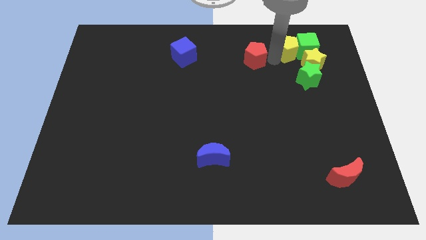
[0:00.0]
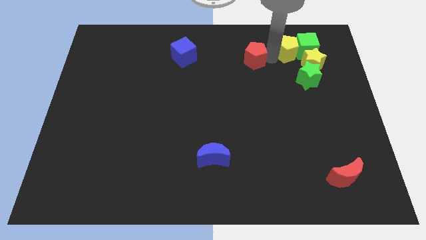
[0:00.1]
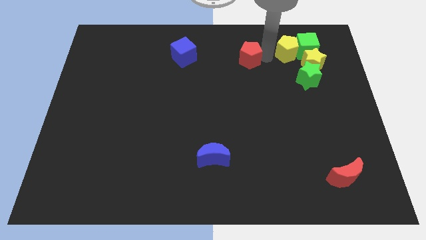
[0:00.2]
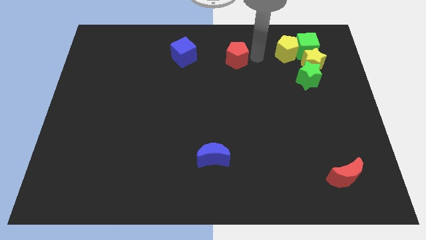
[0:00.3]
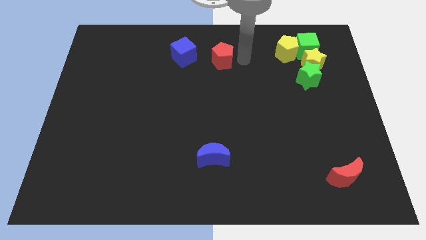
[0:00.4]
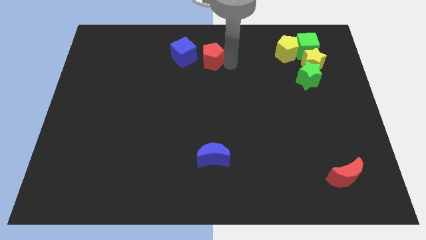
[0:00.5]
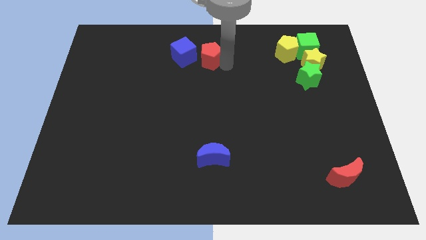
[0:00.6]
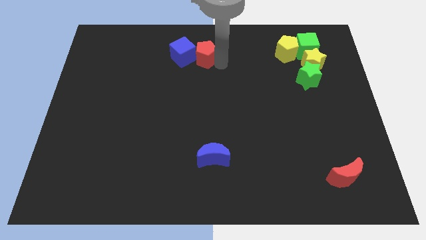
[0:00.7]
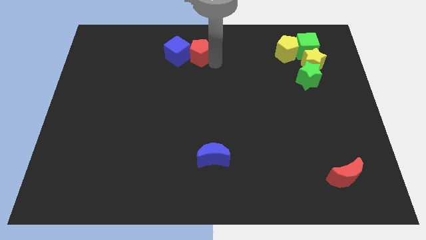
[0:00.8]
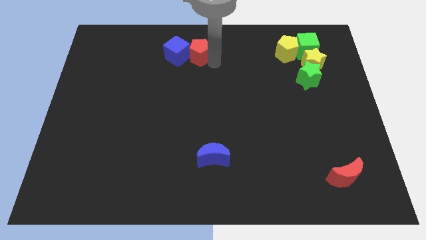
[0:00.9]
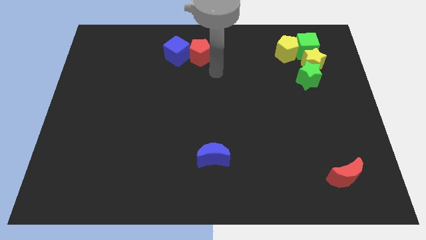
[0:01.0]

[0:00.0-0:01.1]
move the red pentagon to the right of the blue cube

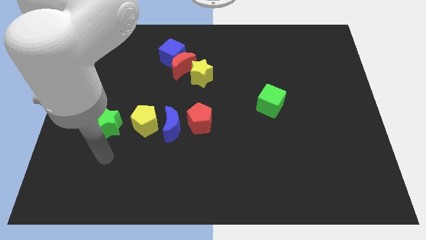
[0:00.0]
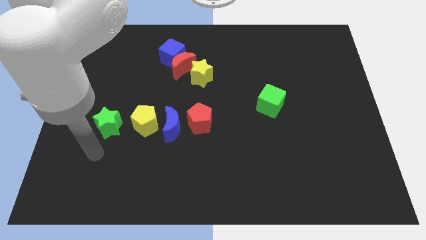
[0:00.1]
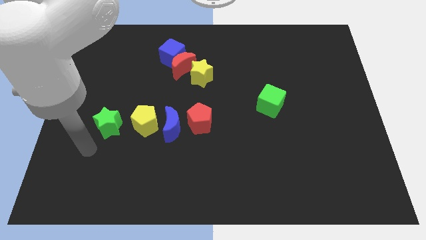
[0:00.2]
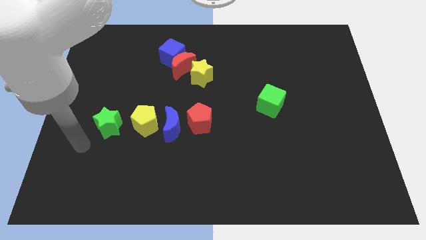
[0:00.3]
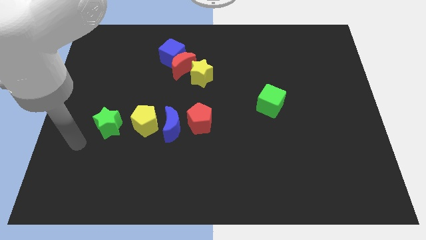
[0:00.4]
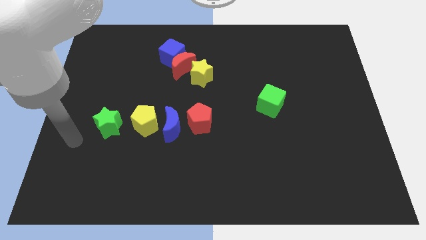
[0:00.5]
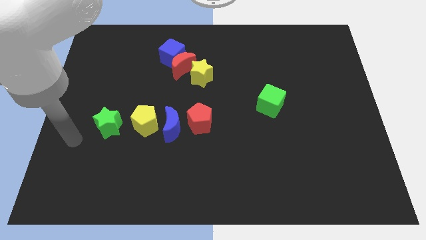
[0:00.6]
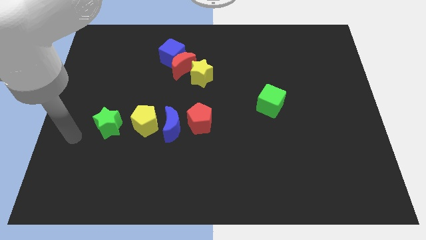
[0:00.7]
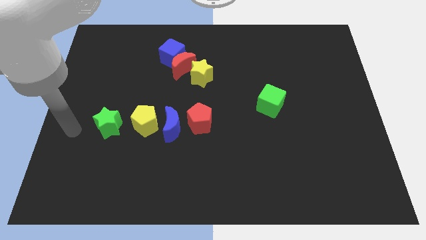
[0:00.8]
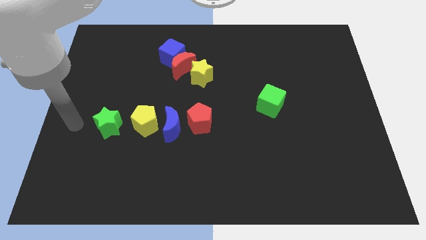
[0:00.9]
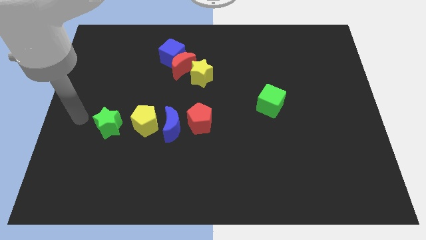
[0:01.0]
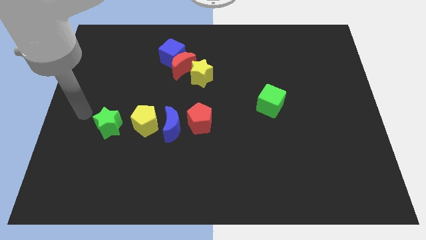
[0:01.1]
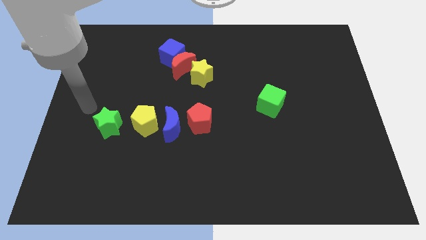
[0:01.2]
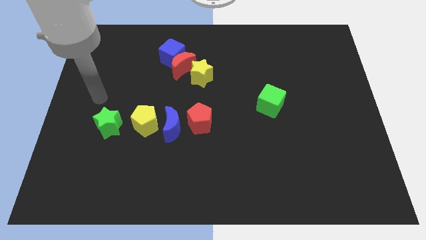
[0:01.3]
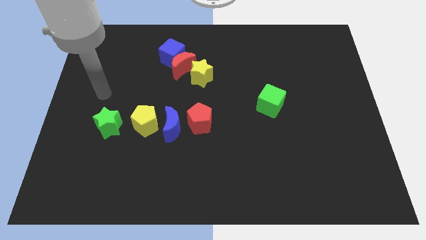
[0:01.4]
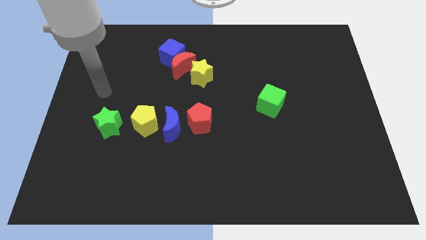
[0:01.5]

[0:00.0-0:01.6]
point your arm above the green star

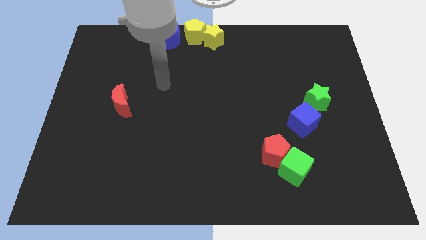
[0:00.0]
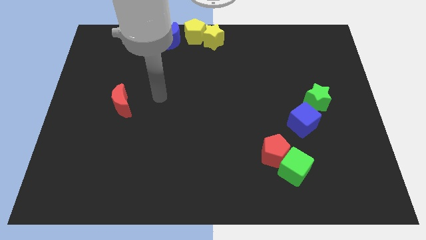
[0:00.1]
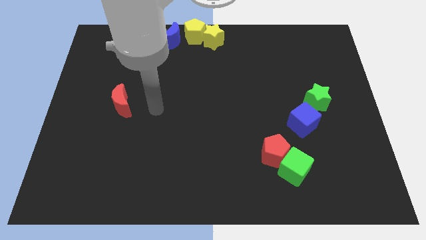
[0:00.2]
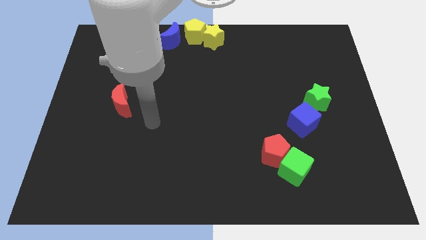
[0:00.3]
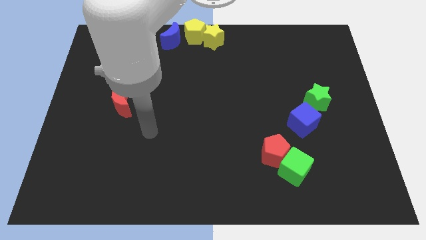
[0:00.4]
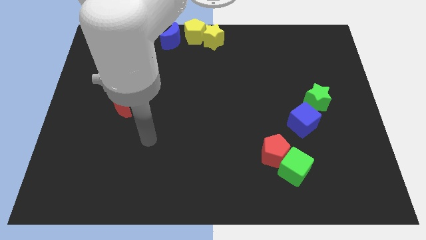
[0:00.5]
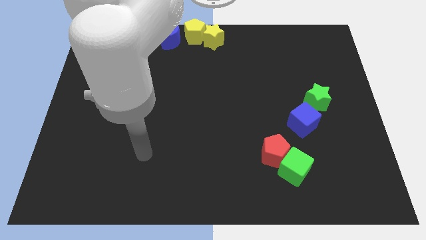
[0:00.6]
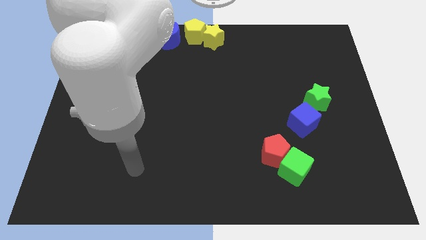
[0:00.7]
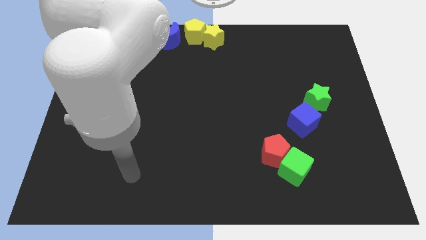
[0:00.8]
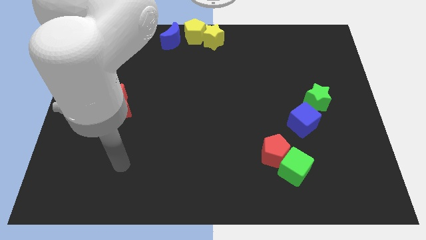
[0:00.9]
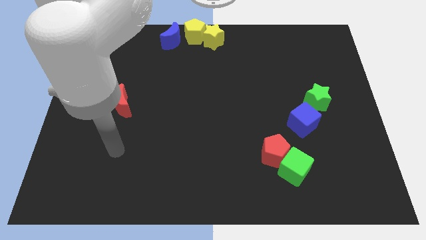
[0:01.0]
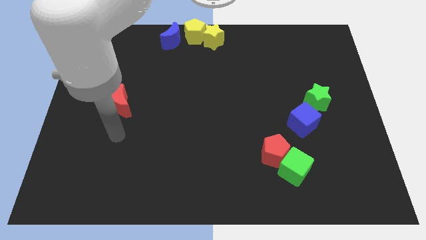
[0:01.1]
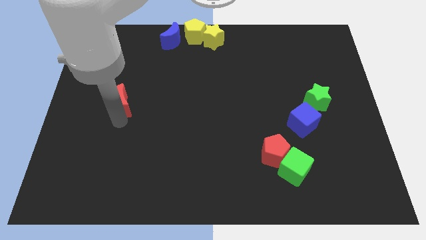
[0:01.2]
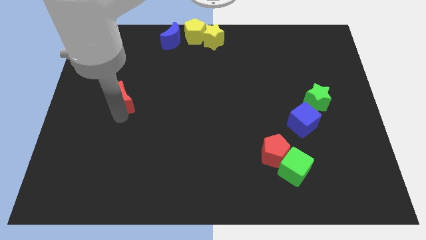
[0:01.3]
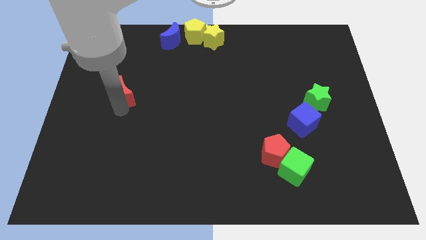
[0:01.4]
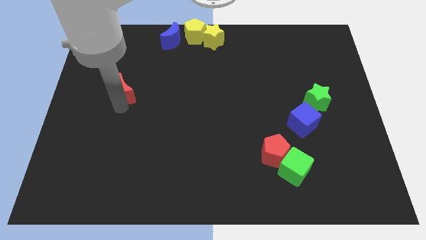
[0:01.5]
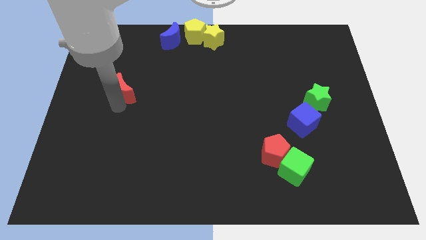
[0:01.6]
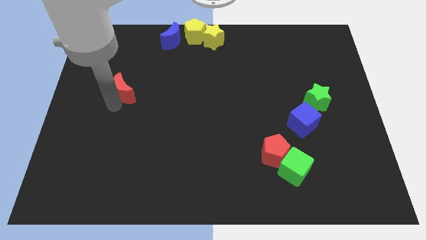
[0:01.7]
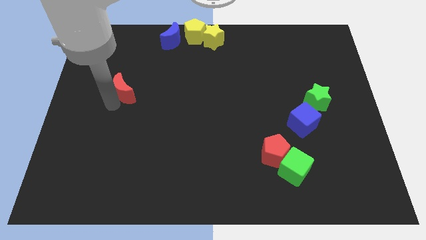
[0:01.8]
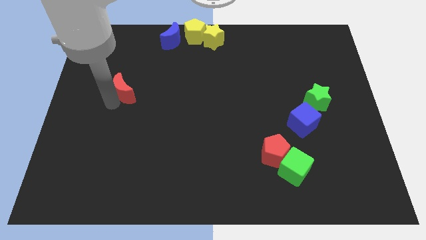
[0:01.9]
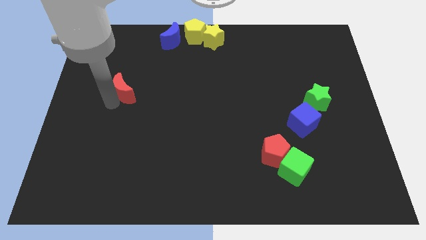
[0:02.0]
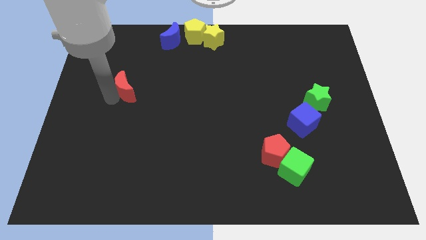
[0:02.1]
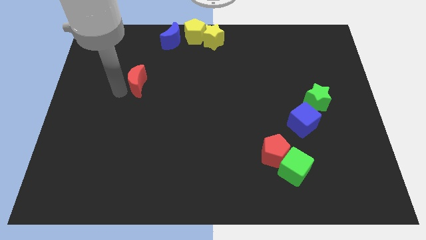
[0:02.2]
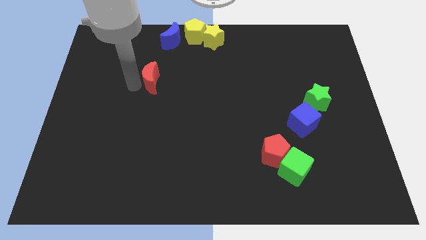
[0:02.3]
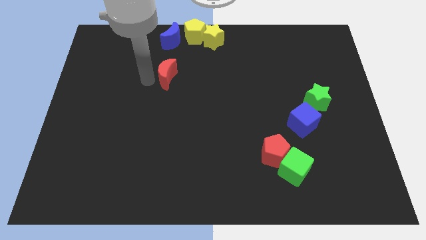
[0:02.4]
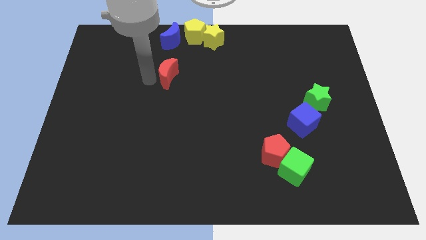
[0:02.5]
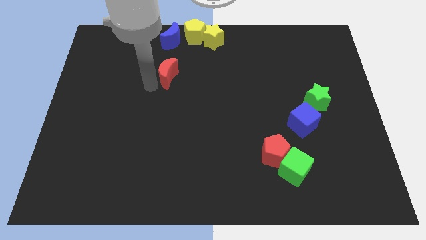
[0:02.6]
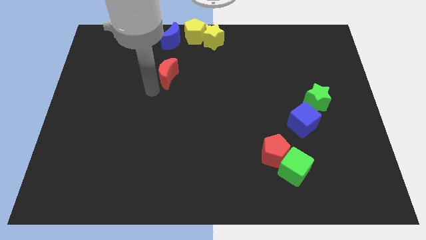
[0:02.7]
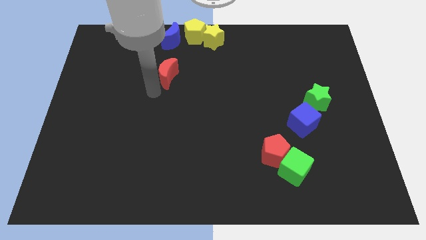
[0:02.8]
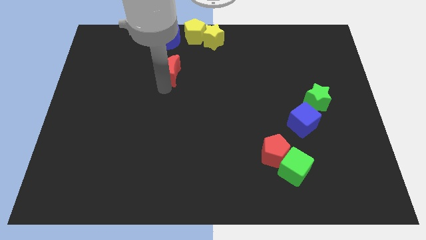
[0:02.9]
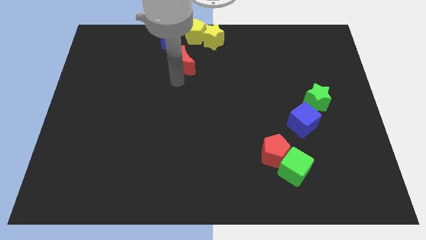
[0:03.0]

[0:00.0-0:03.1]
move red moon below yellow pentagon

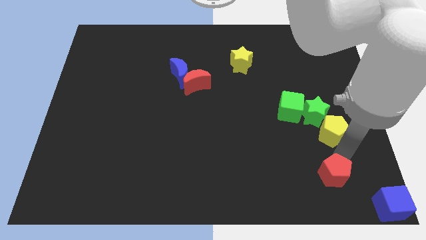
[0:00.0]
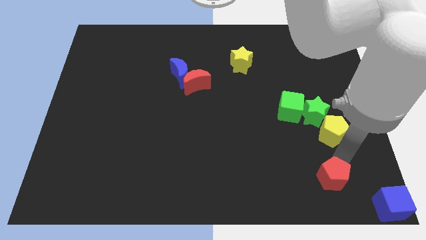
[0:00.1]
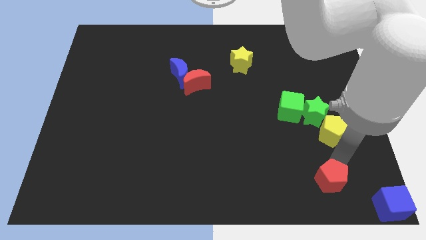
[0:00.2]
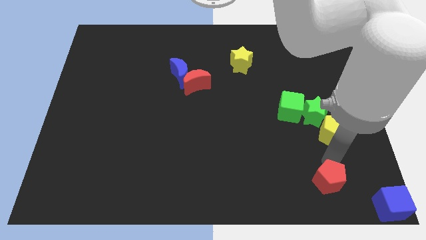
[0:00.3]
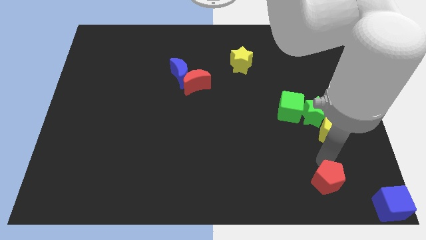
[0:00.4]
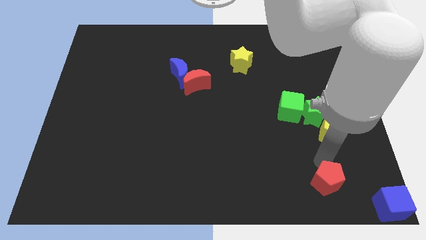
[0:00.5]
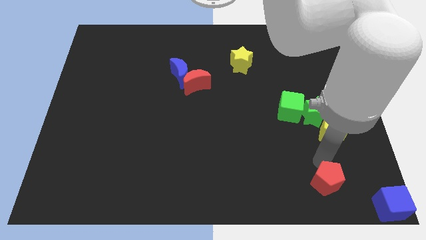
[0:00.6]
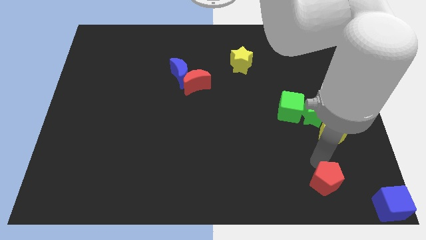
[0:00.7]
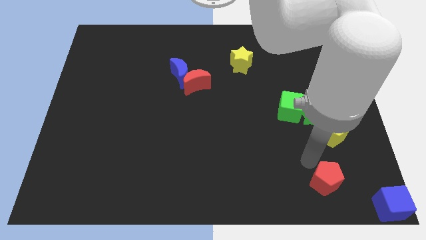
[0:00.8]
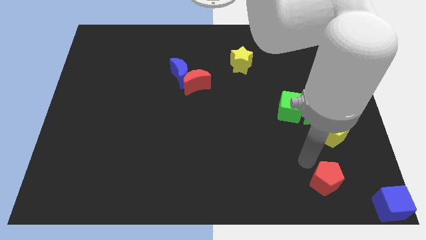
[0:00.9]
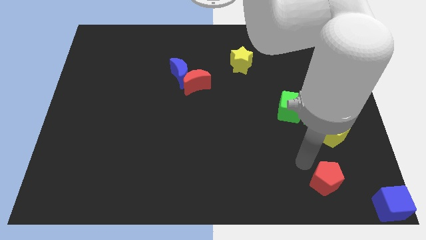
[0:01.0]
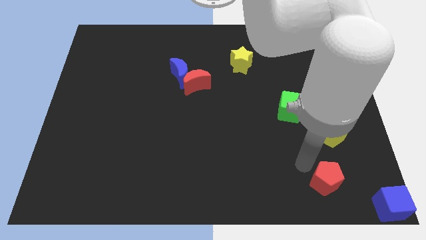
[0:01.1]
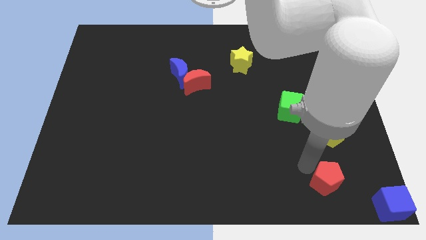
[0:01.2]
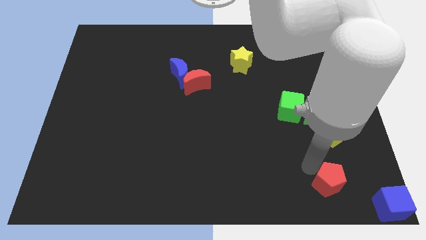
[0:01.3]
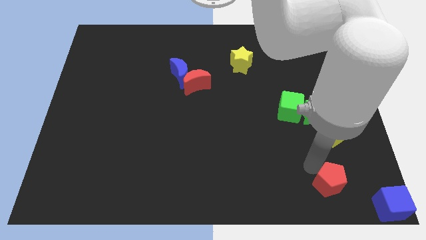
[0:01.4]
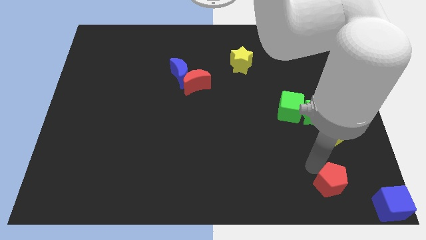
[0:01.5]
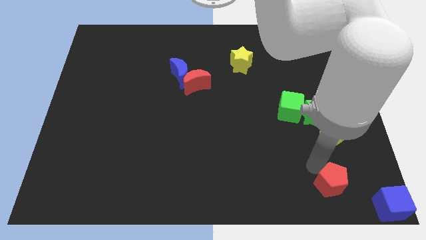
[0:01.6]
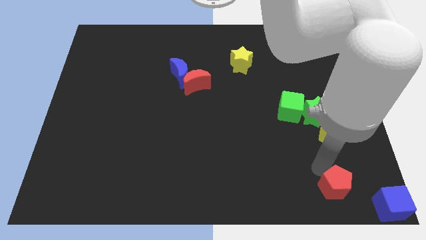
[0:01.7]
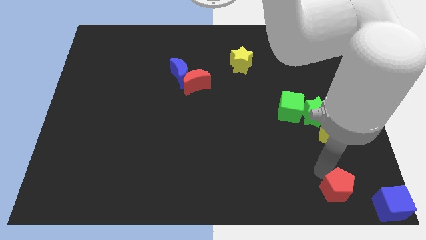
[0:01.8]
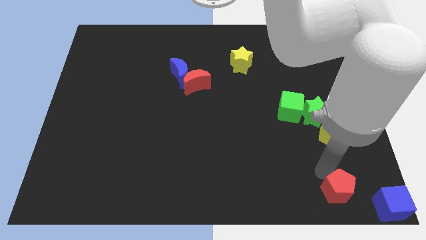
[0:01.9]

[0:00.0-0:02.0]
move the red pentagon towards blue cube

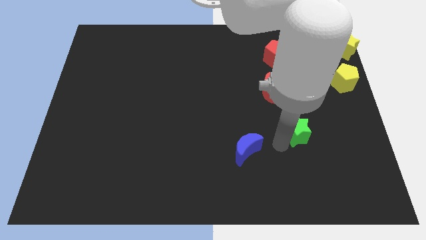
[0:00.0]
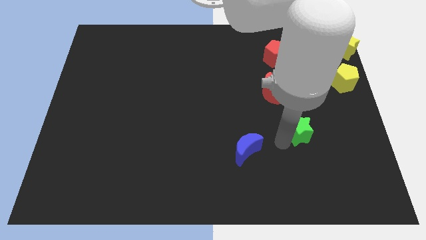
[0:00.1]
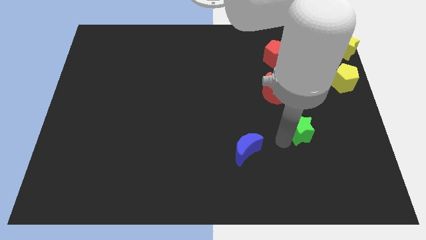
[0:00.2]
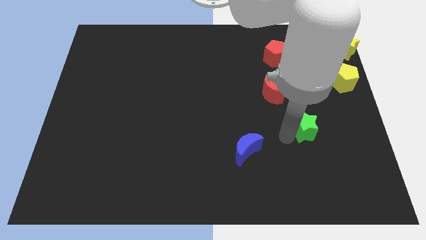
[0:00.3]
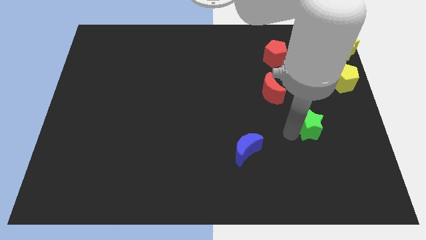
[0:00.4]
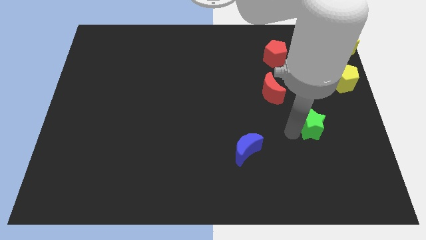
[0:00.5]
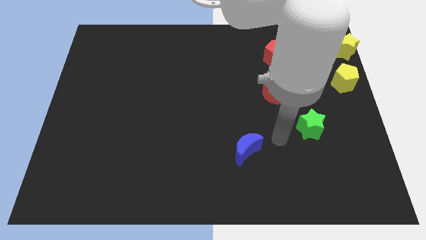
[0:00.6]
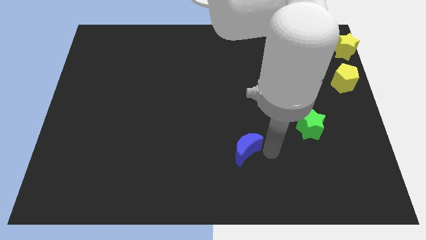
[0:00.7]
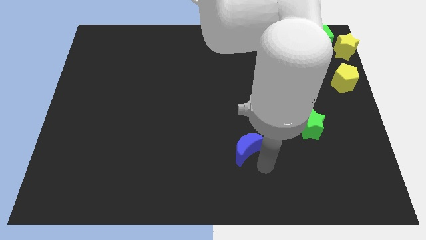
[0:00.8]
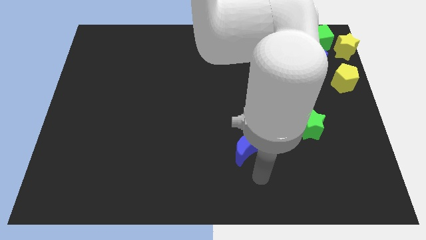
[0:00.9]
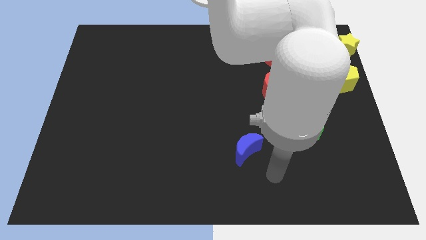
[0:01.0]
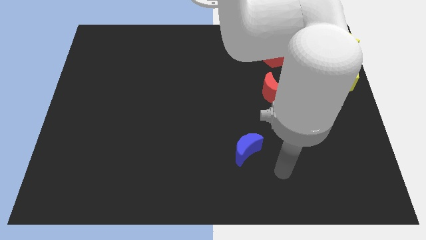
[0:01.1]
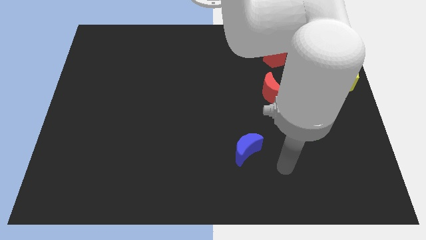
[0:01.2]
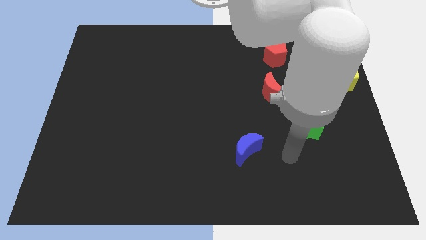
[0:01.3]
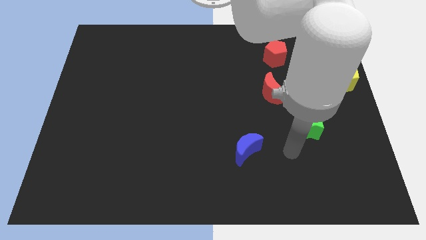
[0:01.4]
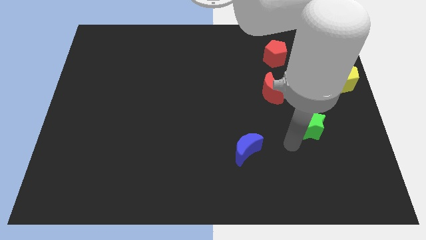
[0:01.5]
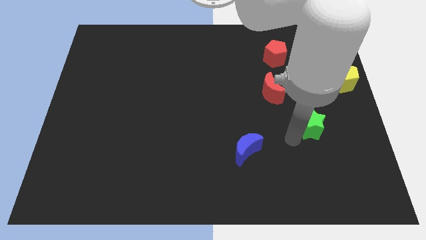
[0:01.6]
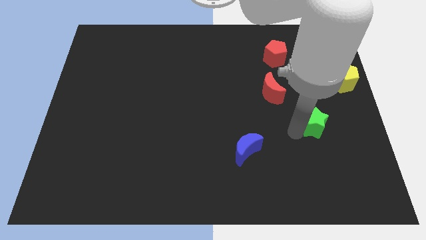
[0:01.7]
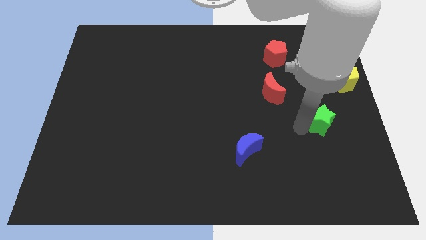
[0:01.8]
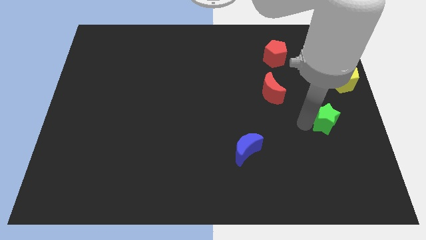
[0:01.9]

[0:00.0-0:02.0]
move the green star slightly to the center right of the board
